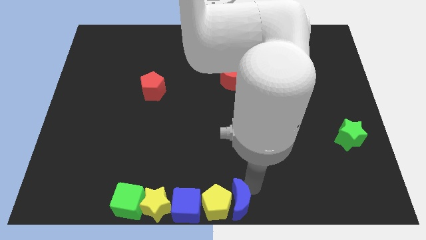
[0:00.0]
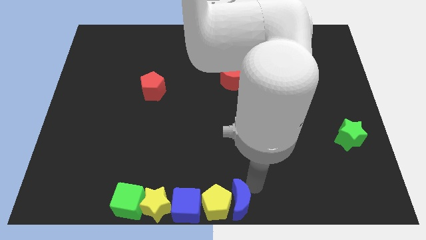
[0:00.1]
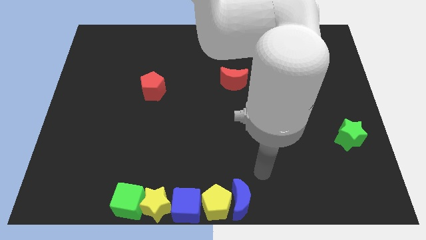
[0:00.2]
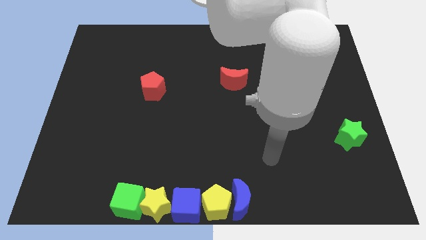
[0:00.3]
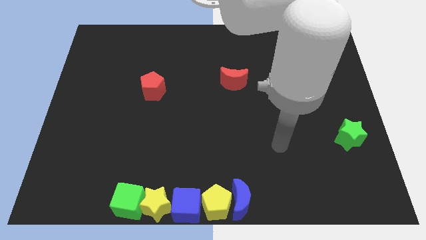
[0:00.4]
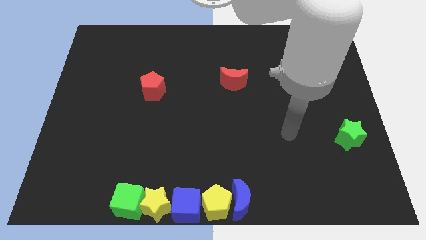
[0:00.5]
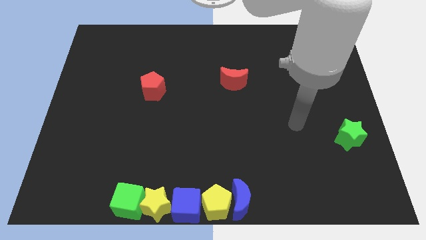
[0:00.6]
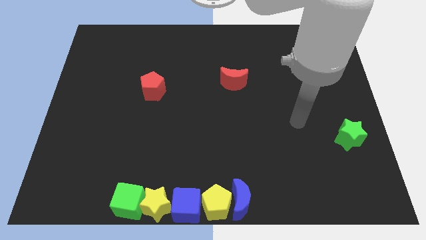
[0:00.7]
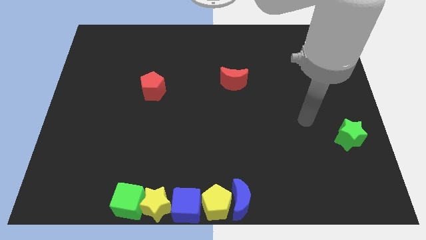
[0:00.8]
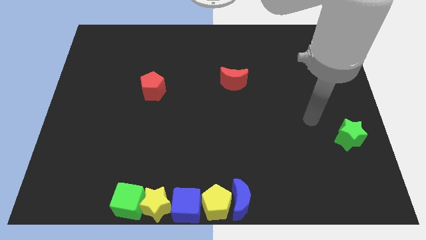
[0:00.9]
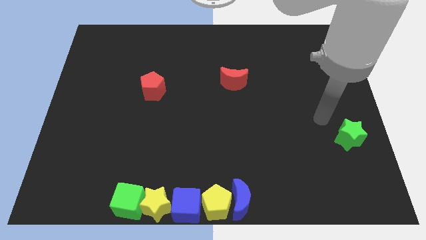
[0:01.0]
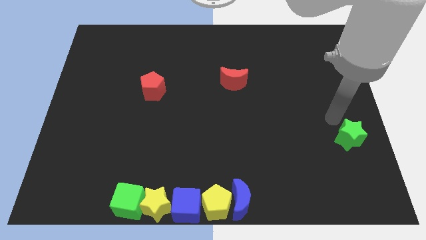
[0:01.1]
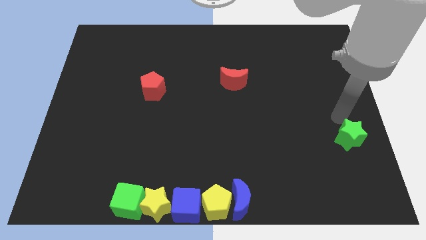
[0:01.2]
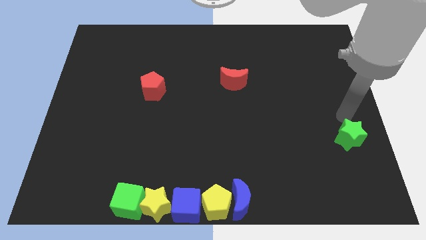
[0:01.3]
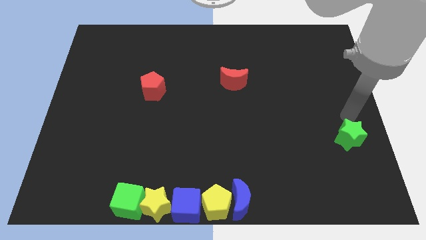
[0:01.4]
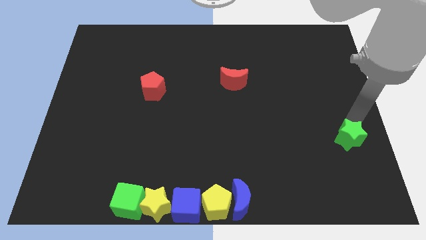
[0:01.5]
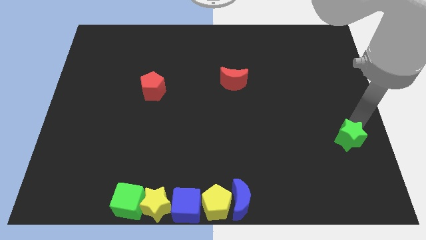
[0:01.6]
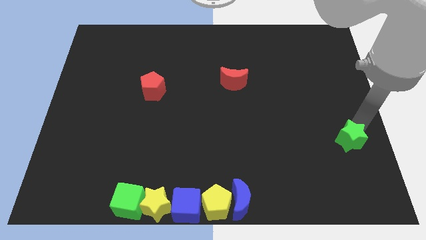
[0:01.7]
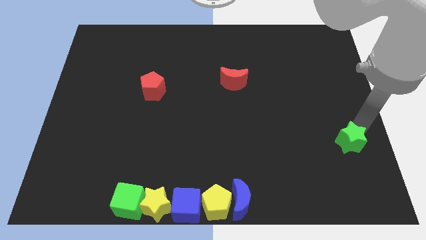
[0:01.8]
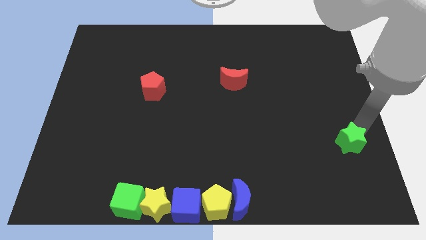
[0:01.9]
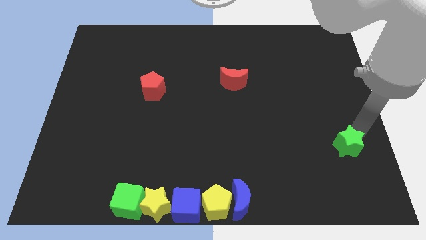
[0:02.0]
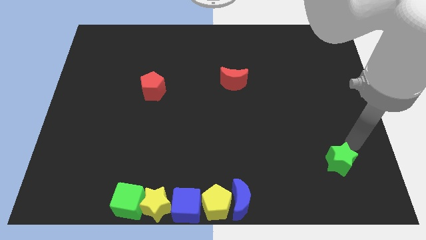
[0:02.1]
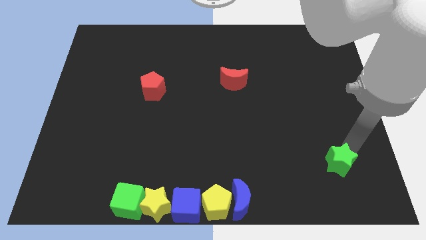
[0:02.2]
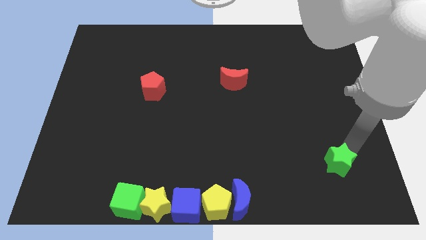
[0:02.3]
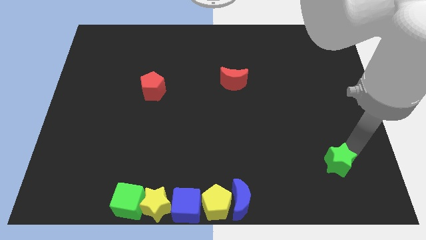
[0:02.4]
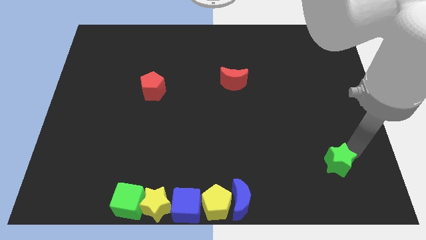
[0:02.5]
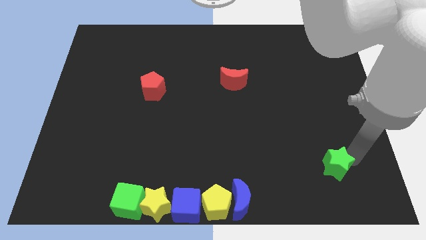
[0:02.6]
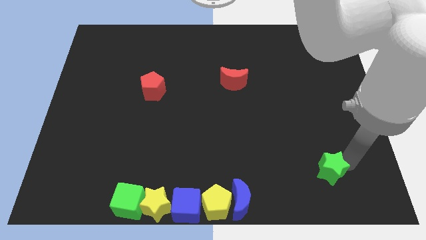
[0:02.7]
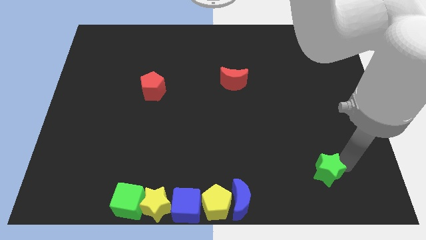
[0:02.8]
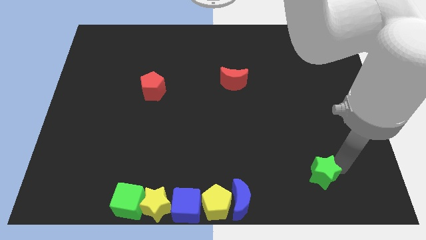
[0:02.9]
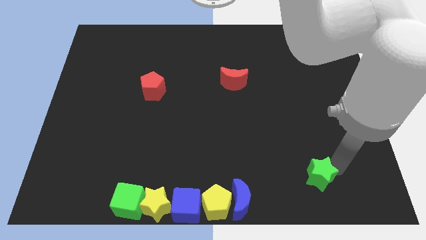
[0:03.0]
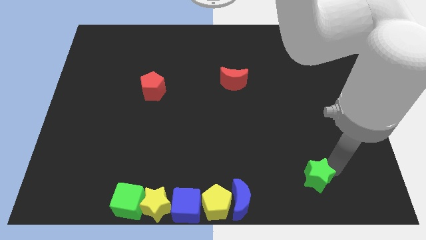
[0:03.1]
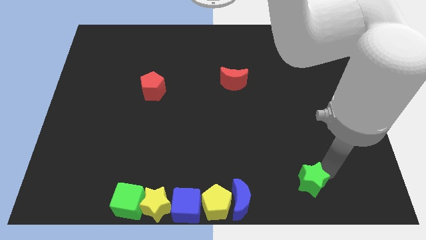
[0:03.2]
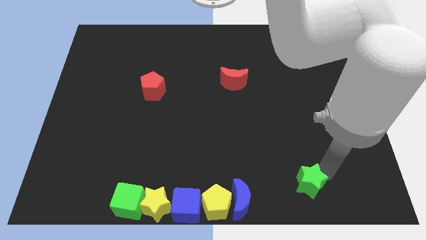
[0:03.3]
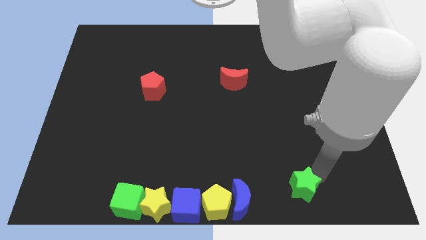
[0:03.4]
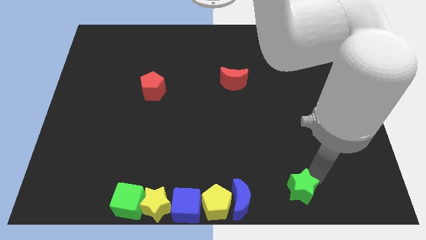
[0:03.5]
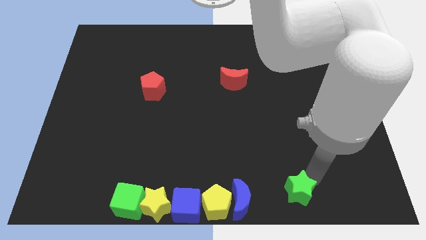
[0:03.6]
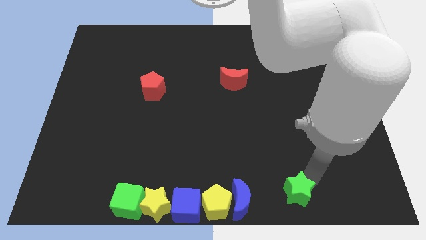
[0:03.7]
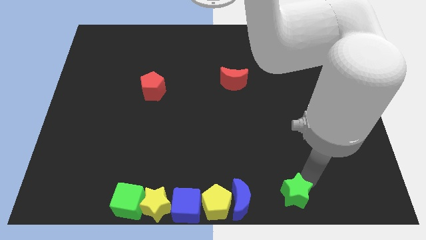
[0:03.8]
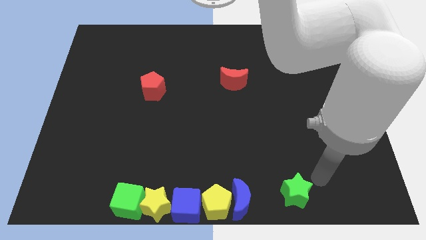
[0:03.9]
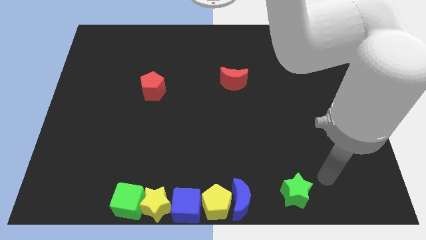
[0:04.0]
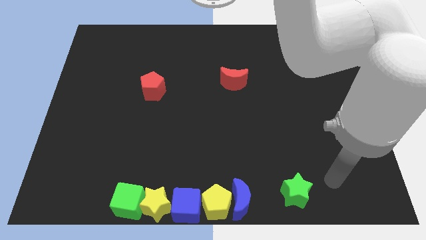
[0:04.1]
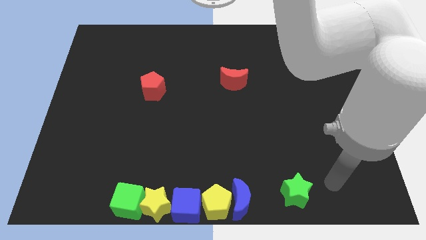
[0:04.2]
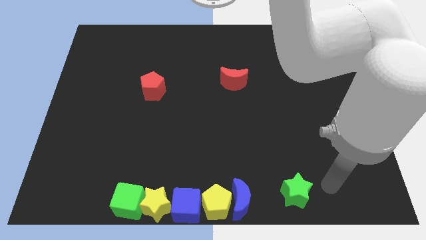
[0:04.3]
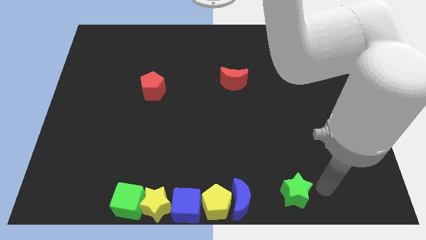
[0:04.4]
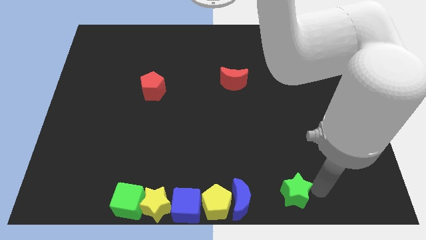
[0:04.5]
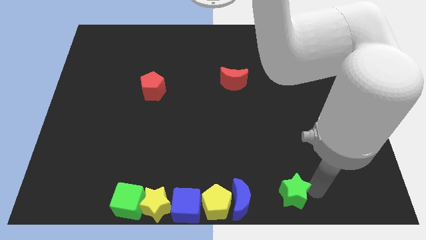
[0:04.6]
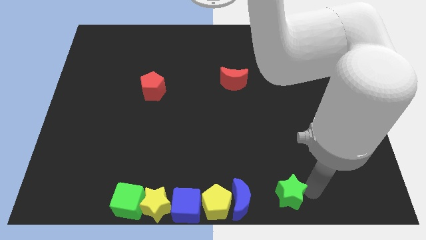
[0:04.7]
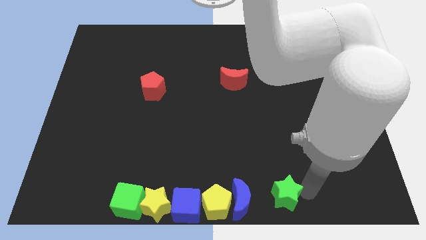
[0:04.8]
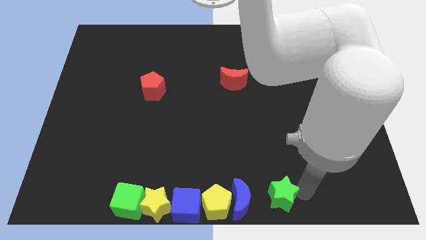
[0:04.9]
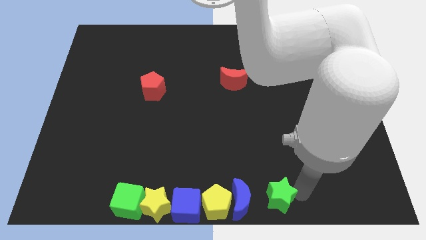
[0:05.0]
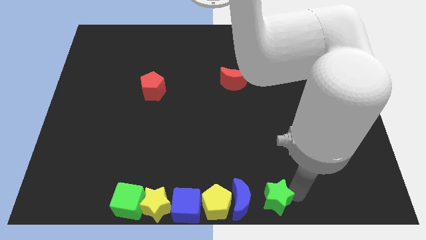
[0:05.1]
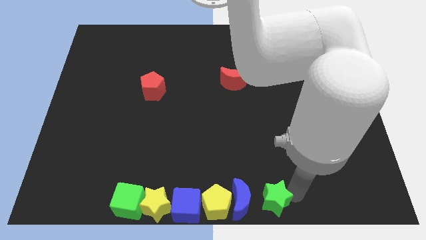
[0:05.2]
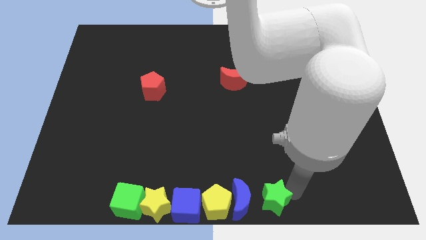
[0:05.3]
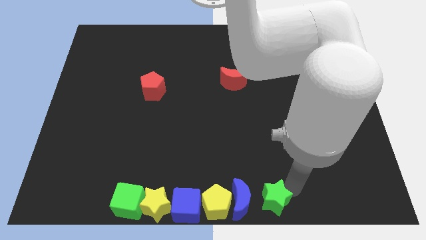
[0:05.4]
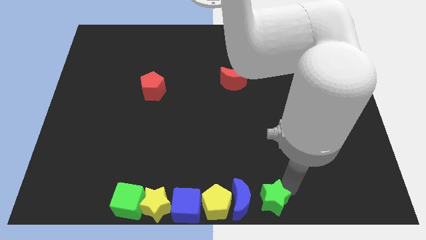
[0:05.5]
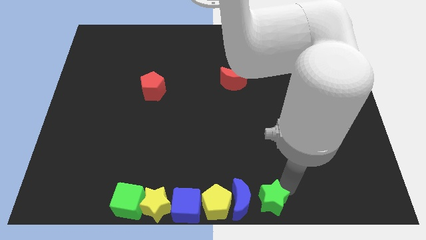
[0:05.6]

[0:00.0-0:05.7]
push the green star downward

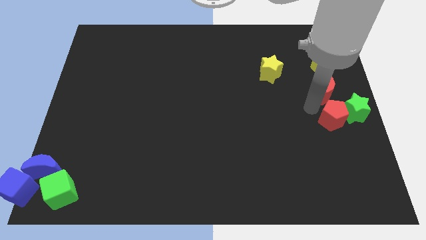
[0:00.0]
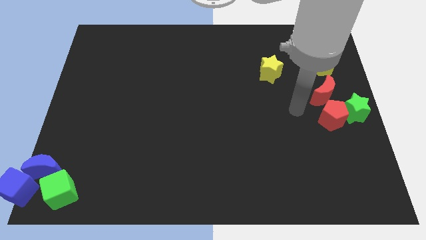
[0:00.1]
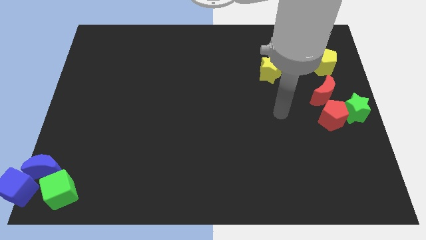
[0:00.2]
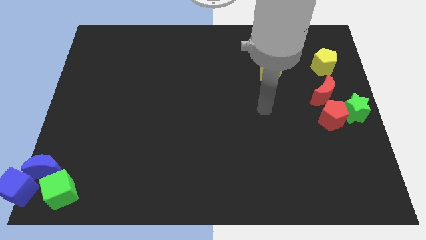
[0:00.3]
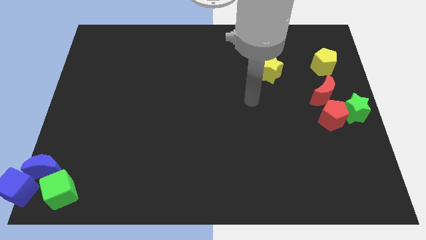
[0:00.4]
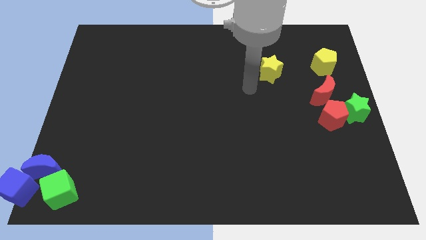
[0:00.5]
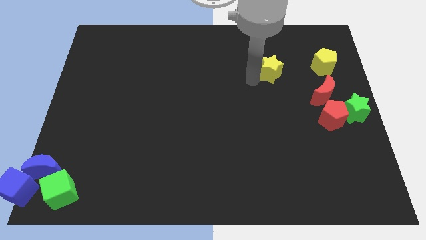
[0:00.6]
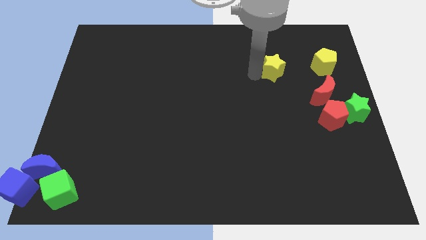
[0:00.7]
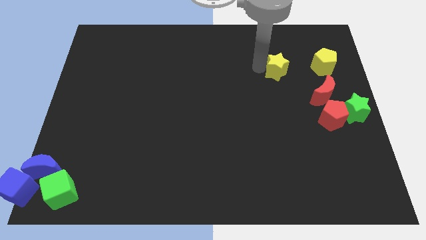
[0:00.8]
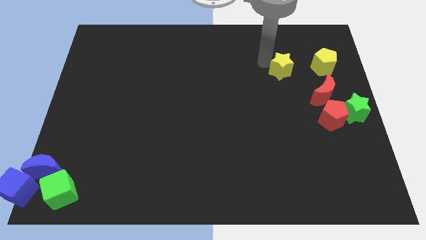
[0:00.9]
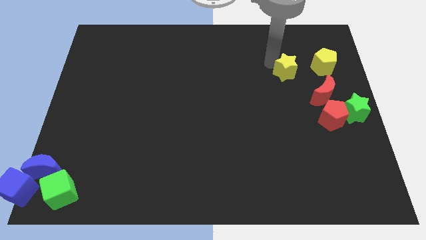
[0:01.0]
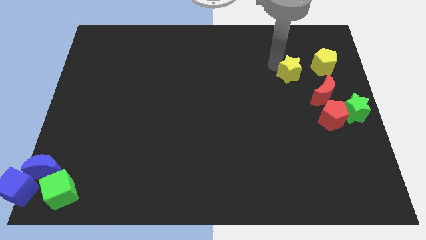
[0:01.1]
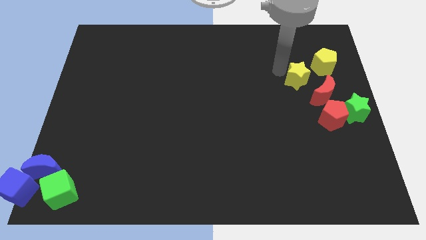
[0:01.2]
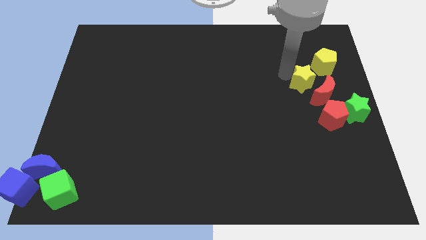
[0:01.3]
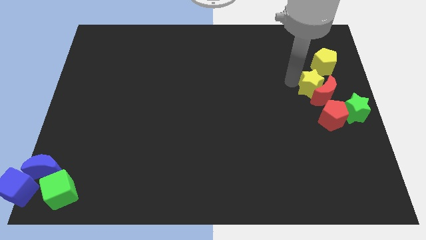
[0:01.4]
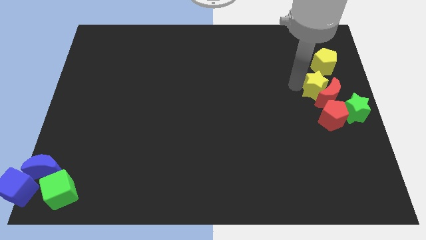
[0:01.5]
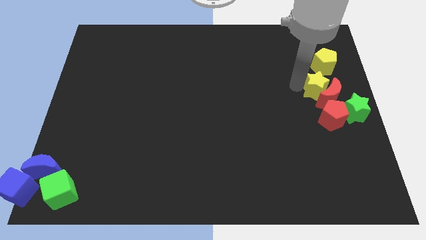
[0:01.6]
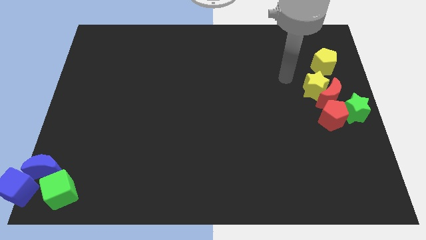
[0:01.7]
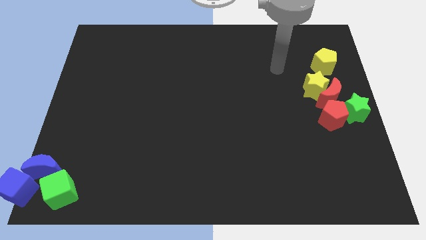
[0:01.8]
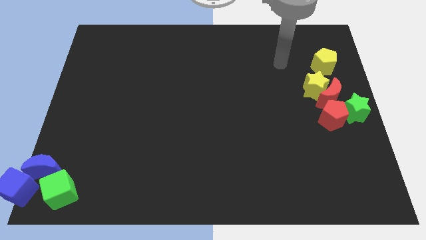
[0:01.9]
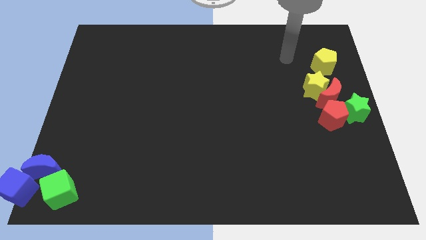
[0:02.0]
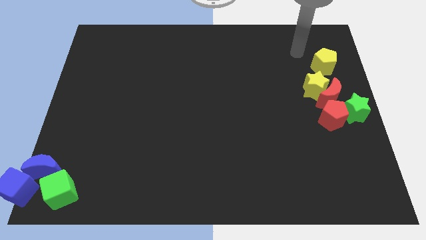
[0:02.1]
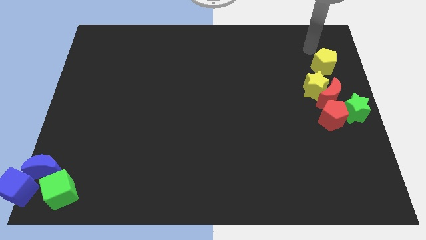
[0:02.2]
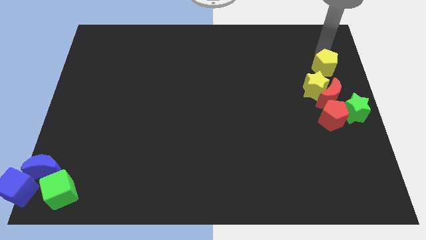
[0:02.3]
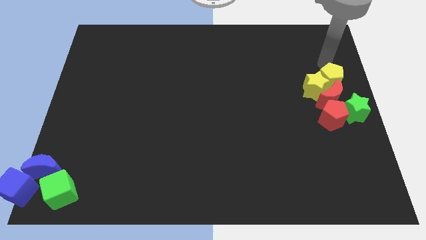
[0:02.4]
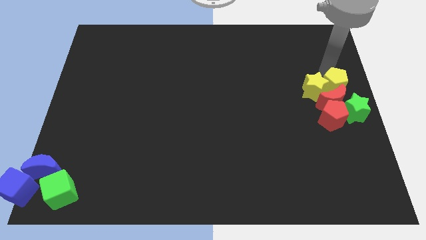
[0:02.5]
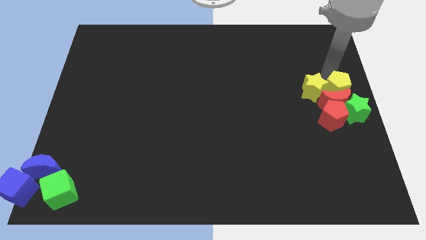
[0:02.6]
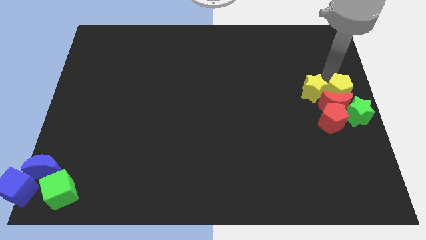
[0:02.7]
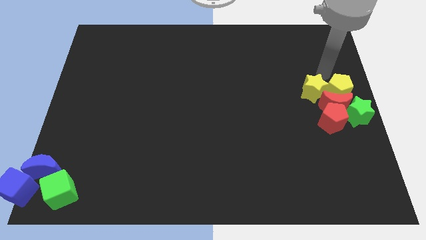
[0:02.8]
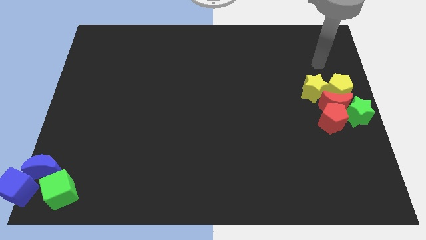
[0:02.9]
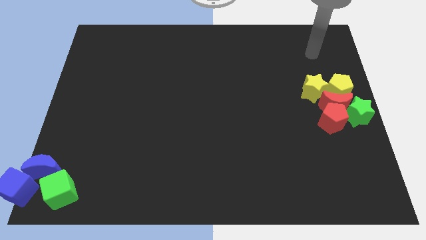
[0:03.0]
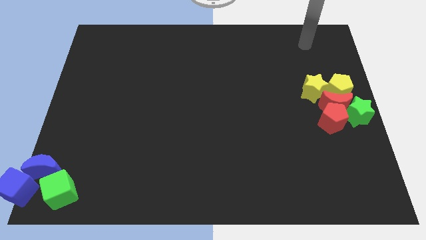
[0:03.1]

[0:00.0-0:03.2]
push the yellow star and yellow pentagon into red moon on top
